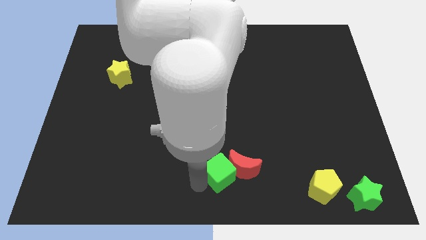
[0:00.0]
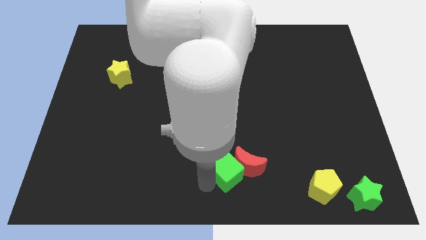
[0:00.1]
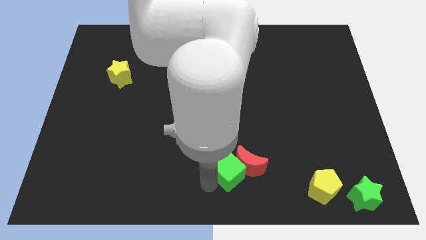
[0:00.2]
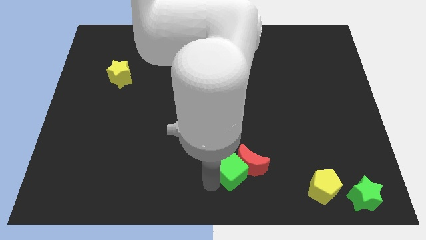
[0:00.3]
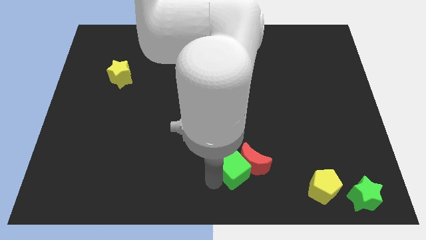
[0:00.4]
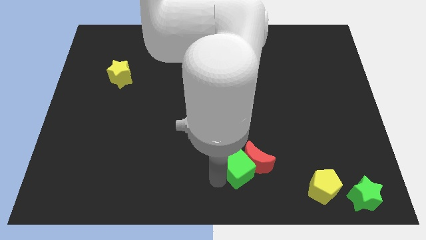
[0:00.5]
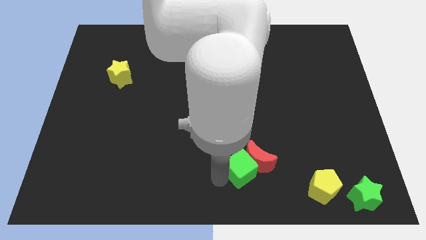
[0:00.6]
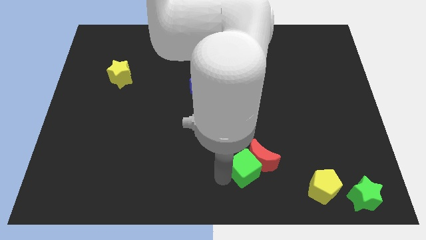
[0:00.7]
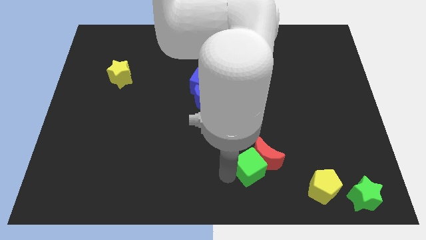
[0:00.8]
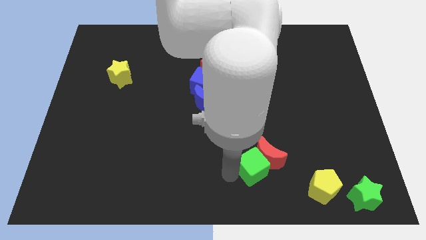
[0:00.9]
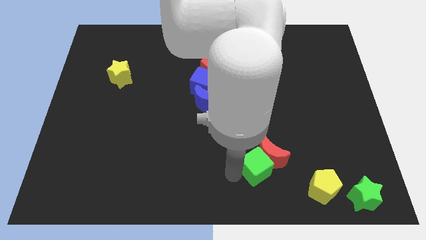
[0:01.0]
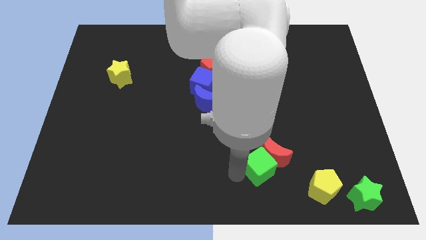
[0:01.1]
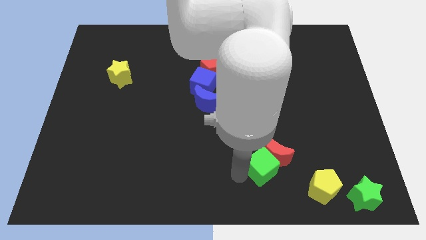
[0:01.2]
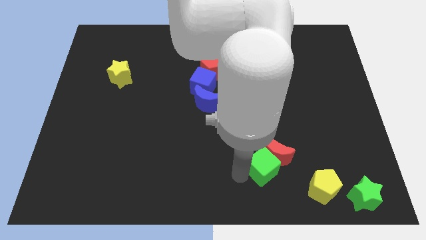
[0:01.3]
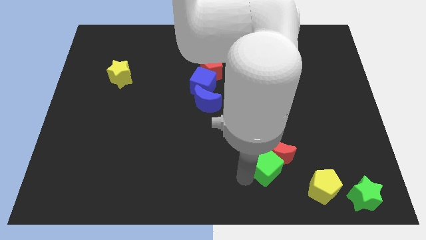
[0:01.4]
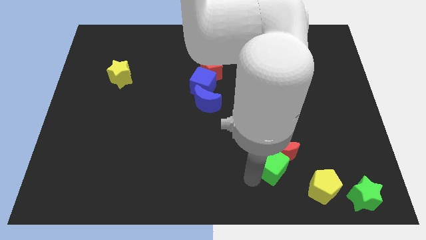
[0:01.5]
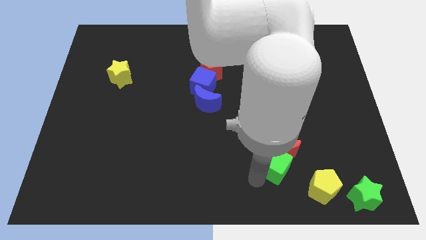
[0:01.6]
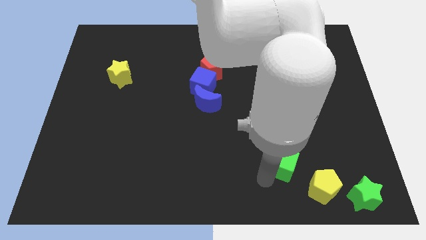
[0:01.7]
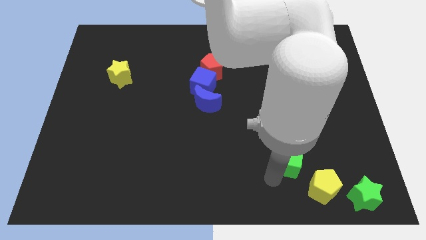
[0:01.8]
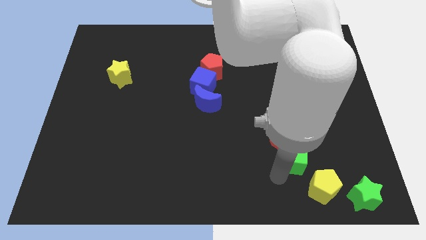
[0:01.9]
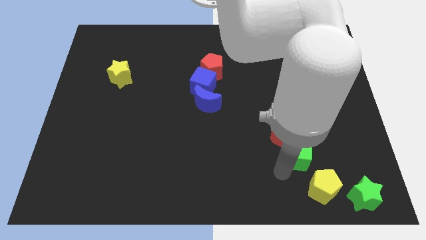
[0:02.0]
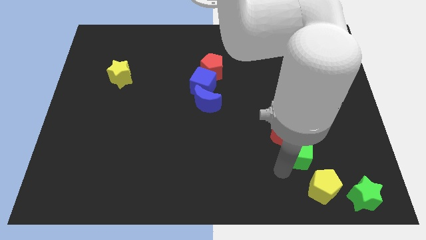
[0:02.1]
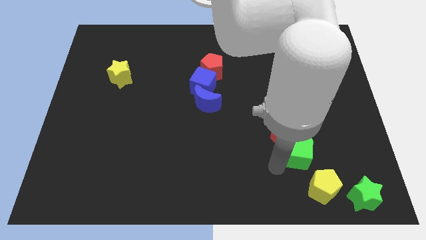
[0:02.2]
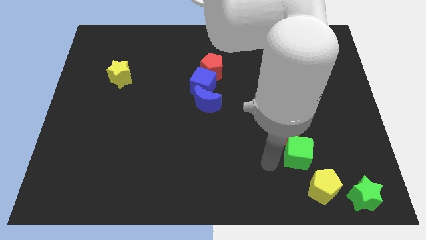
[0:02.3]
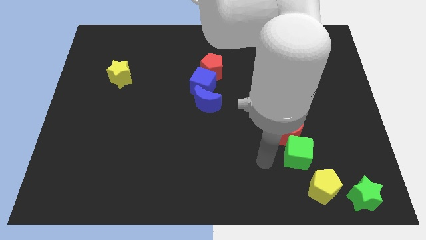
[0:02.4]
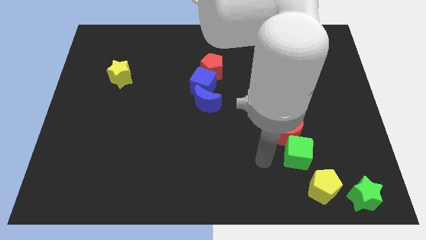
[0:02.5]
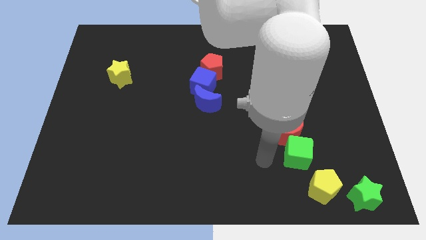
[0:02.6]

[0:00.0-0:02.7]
push the green cube and red moon towards the right side

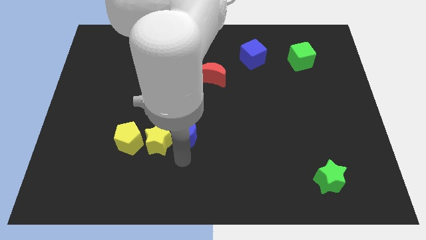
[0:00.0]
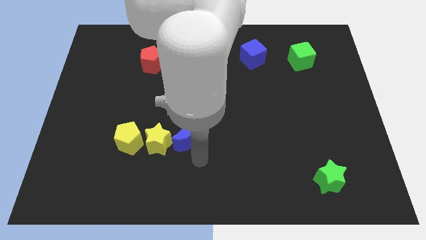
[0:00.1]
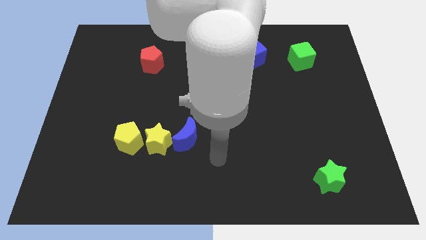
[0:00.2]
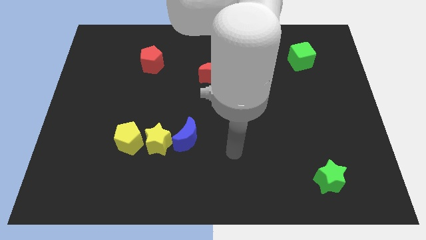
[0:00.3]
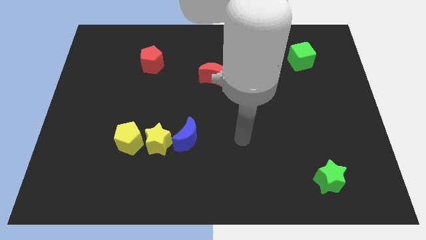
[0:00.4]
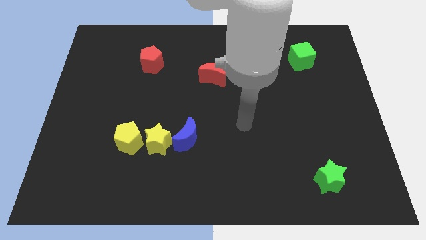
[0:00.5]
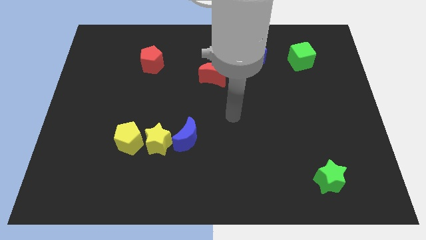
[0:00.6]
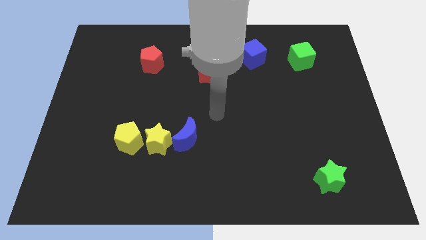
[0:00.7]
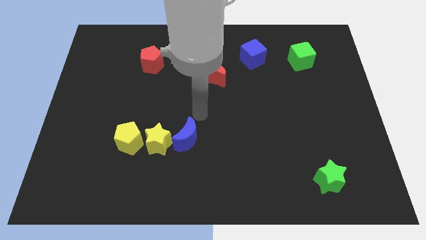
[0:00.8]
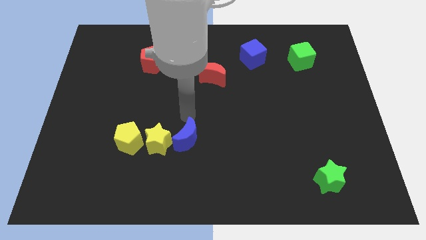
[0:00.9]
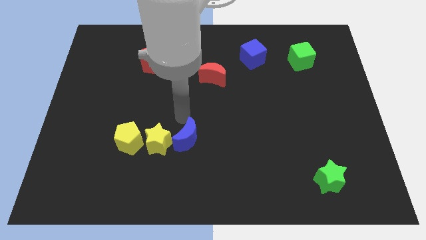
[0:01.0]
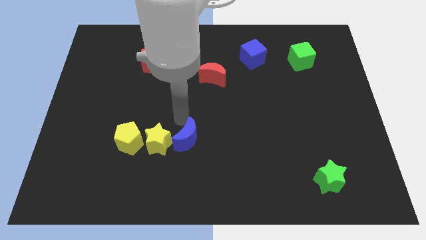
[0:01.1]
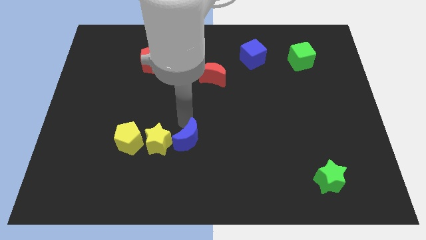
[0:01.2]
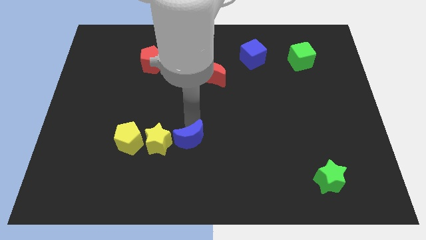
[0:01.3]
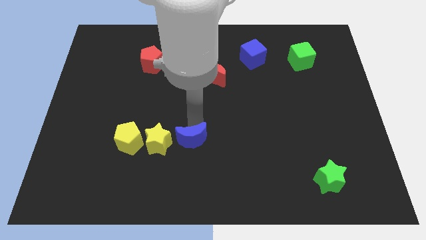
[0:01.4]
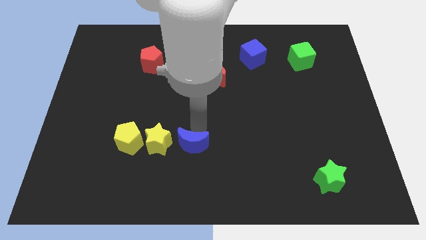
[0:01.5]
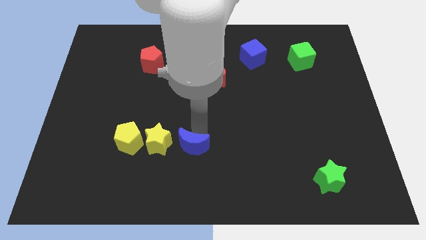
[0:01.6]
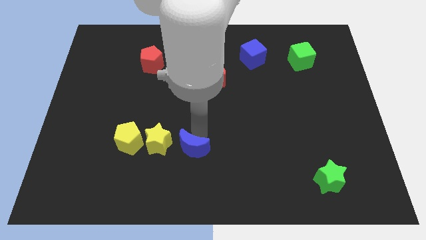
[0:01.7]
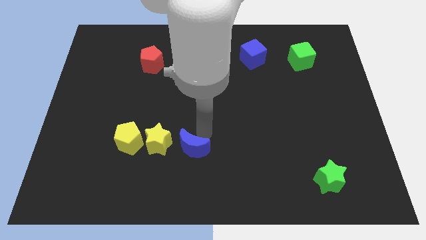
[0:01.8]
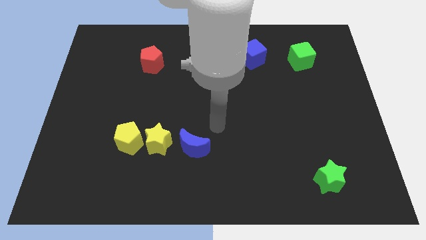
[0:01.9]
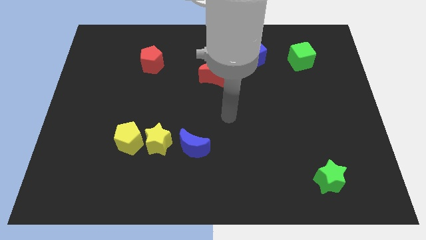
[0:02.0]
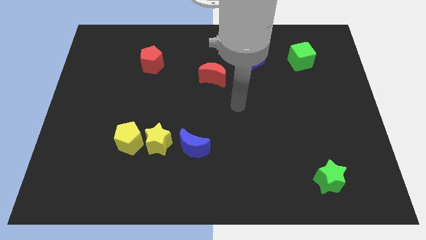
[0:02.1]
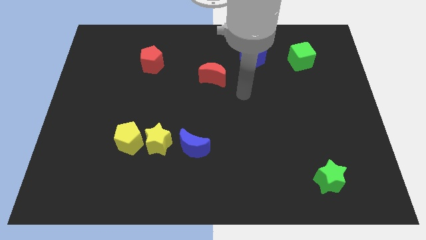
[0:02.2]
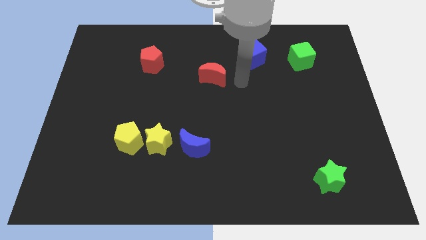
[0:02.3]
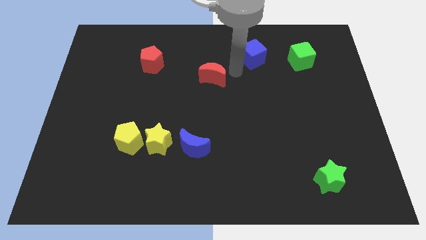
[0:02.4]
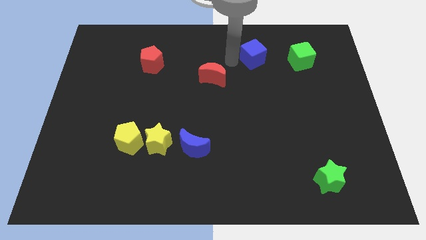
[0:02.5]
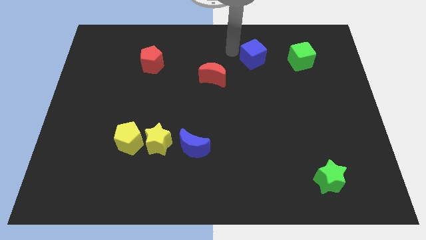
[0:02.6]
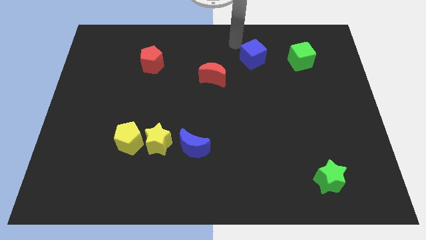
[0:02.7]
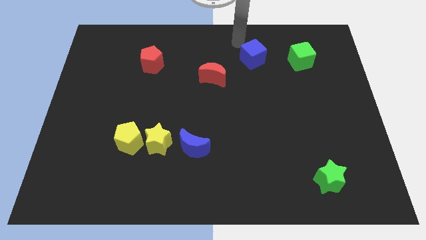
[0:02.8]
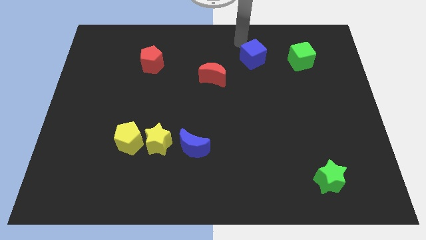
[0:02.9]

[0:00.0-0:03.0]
point your arm beside blue cube

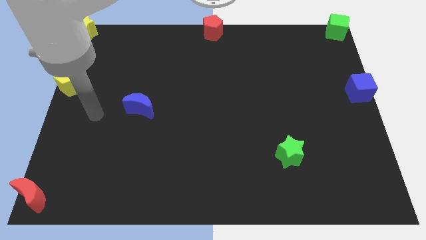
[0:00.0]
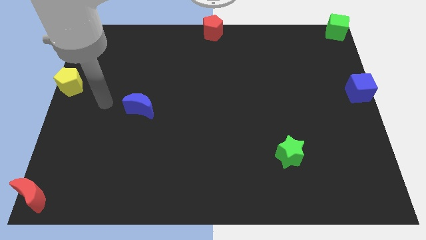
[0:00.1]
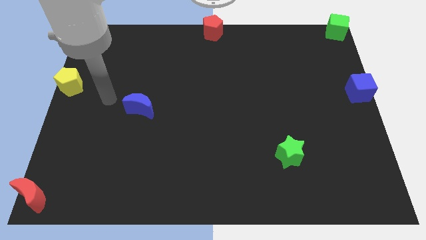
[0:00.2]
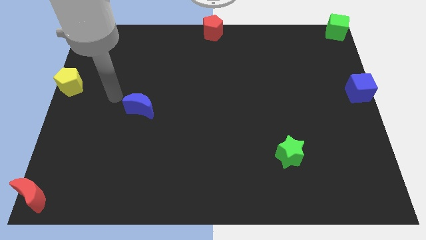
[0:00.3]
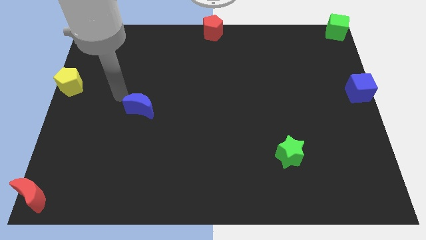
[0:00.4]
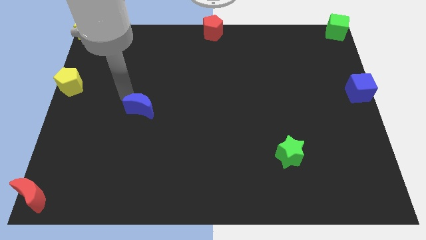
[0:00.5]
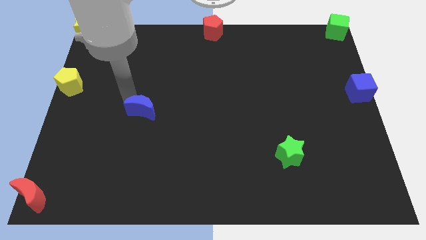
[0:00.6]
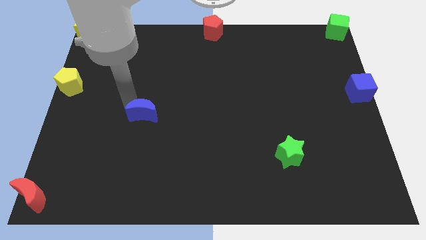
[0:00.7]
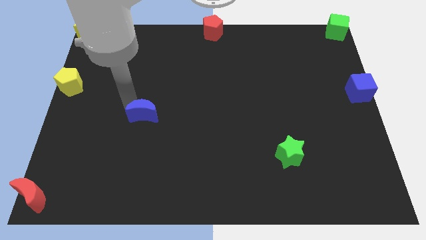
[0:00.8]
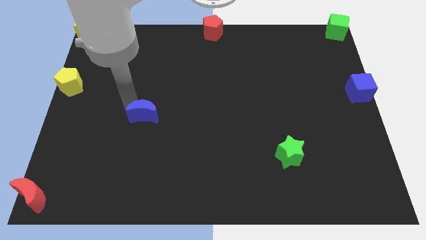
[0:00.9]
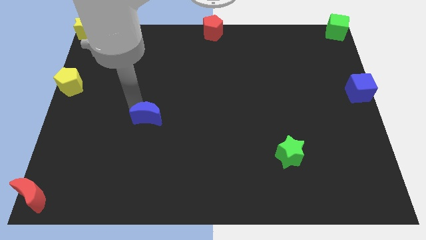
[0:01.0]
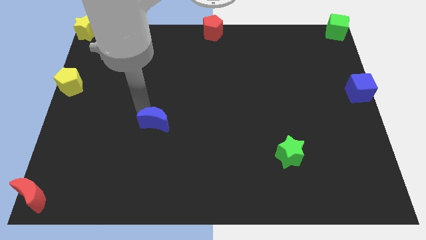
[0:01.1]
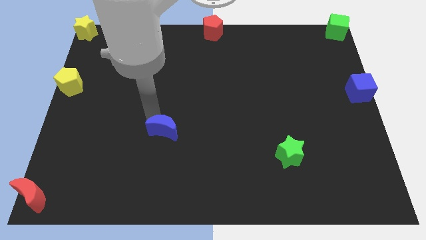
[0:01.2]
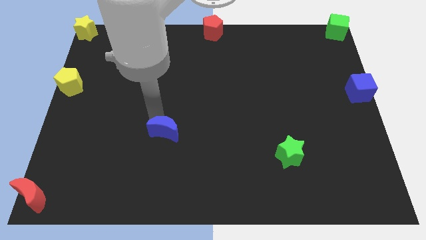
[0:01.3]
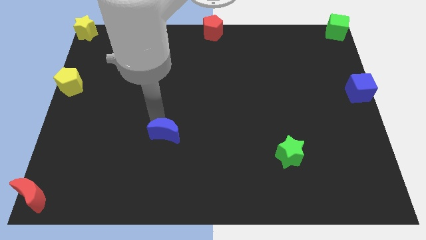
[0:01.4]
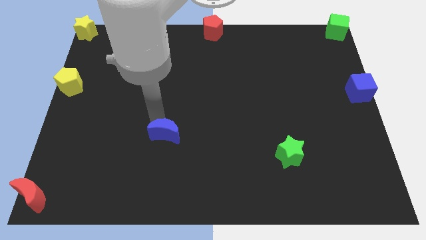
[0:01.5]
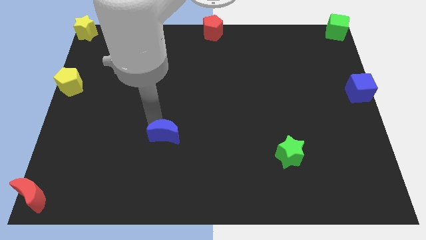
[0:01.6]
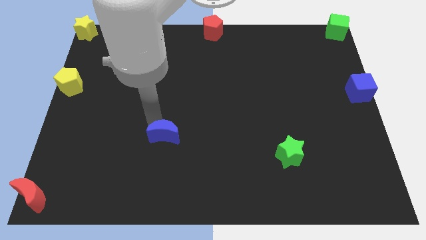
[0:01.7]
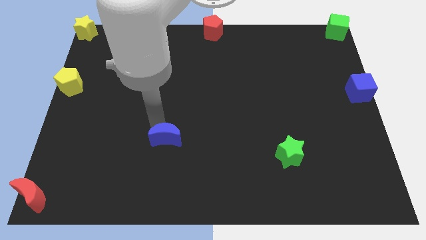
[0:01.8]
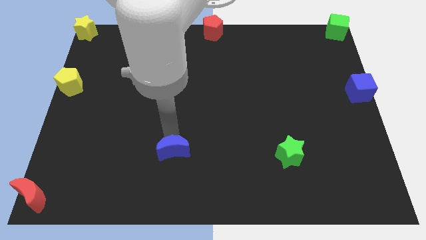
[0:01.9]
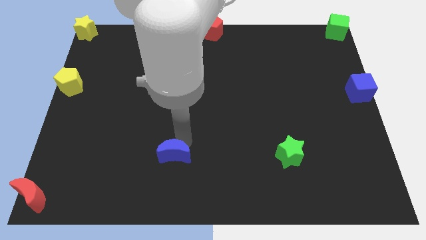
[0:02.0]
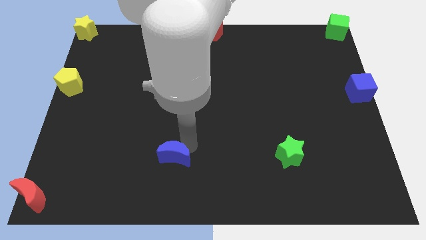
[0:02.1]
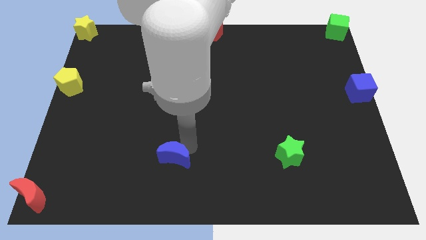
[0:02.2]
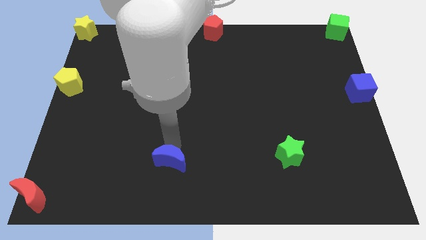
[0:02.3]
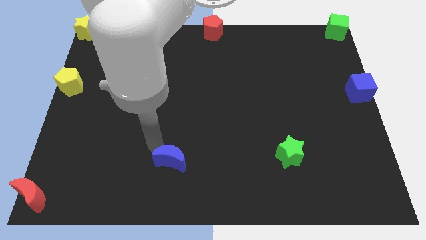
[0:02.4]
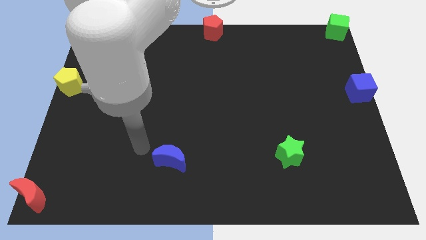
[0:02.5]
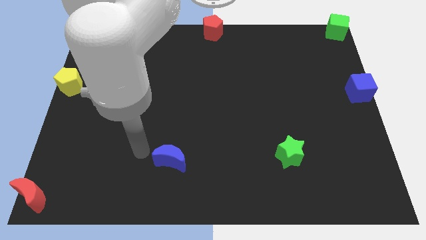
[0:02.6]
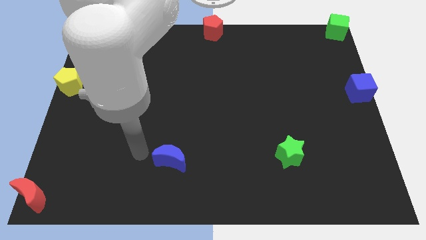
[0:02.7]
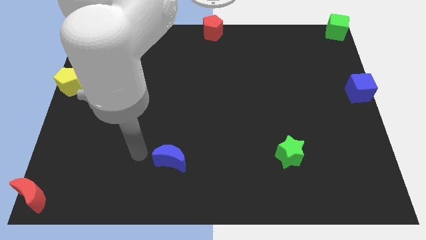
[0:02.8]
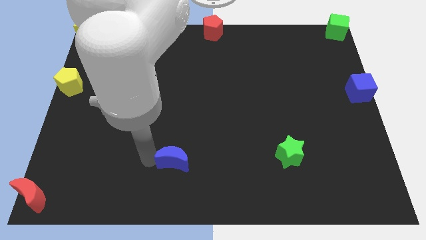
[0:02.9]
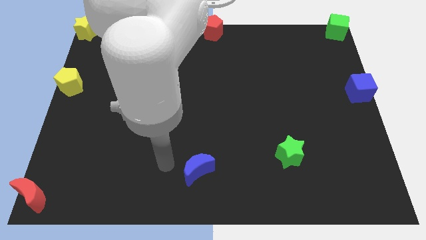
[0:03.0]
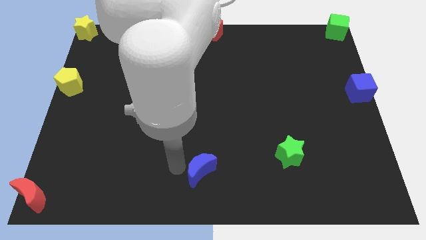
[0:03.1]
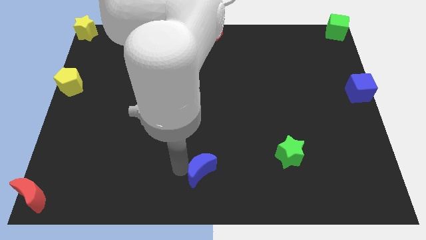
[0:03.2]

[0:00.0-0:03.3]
push the blue moon to the left side of the green star
